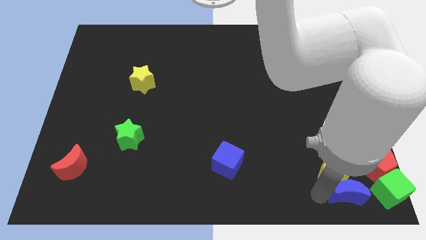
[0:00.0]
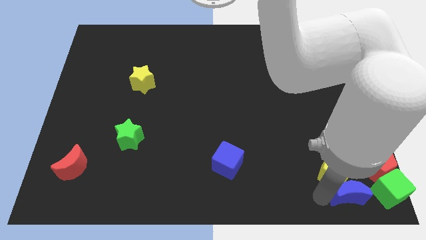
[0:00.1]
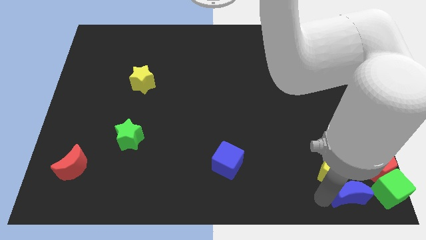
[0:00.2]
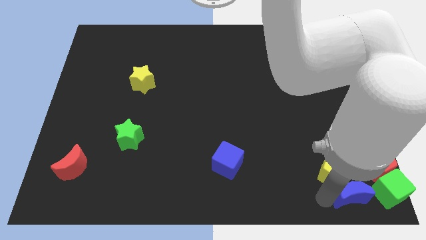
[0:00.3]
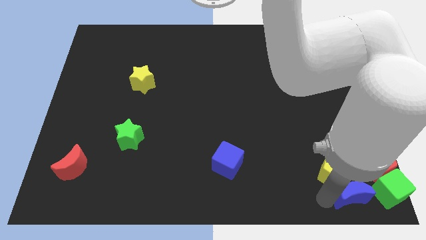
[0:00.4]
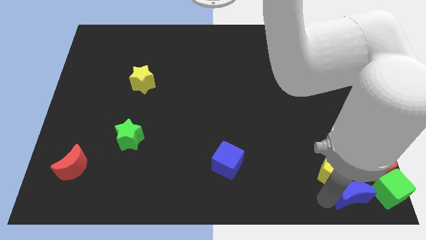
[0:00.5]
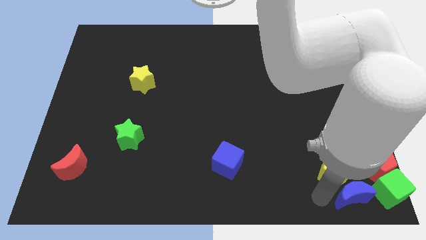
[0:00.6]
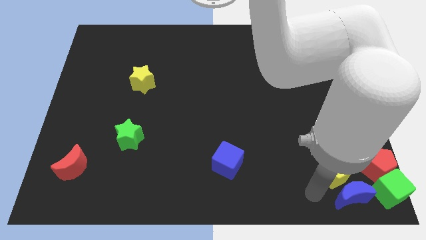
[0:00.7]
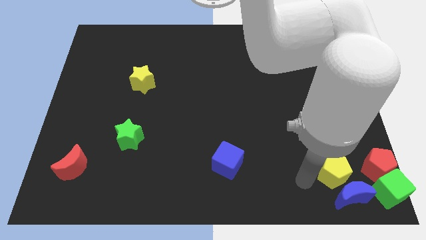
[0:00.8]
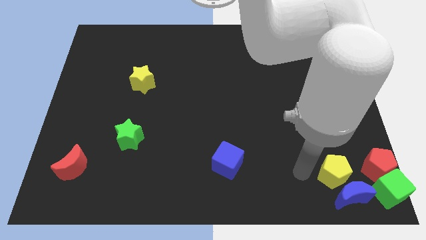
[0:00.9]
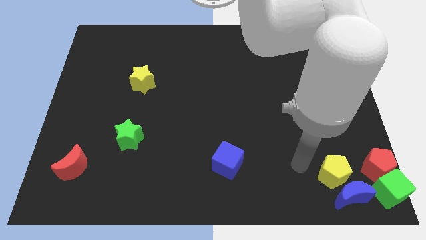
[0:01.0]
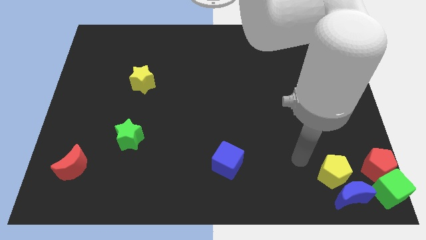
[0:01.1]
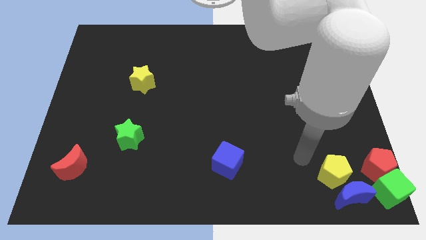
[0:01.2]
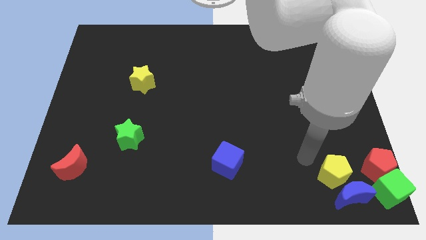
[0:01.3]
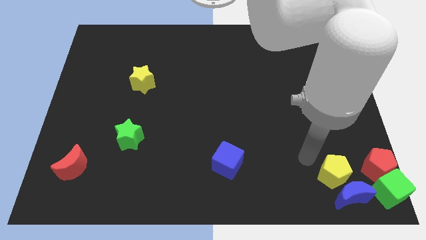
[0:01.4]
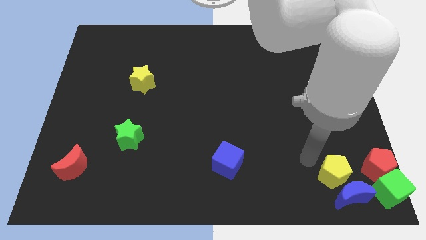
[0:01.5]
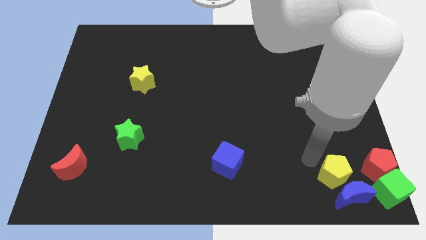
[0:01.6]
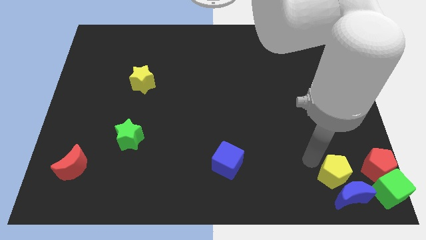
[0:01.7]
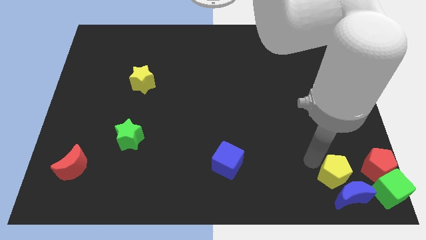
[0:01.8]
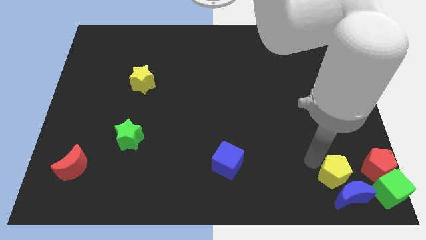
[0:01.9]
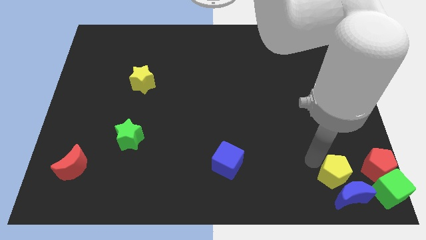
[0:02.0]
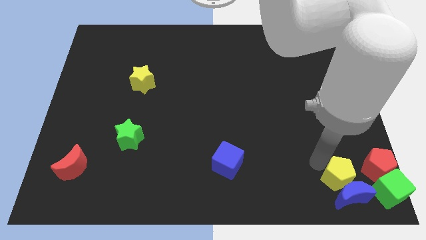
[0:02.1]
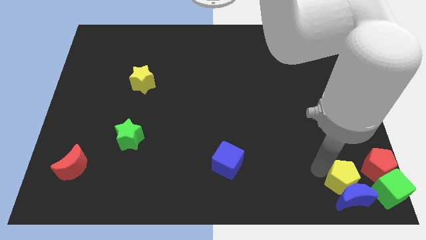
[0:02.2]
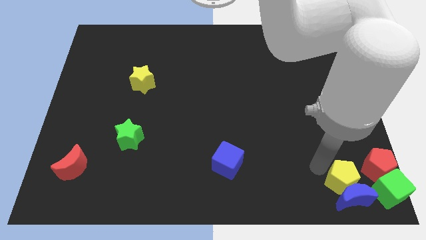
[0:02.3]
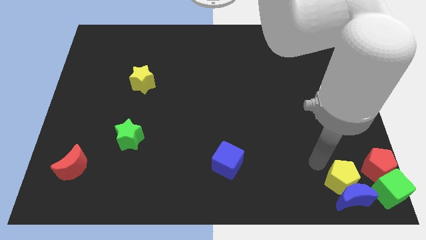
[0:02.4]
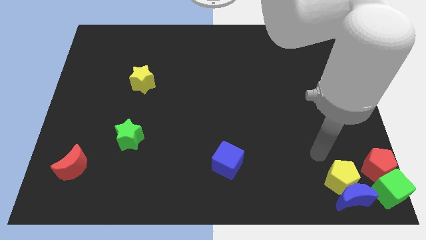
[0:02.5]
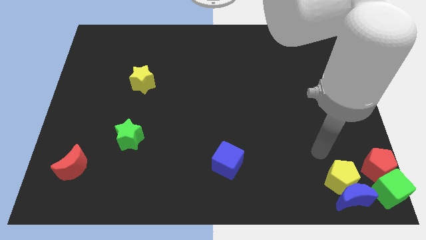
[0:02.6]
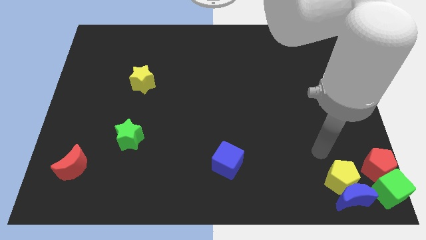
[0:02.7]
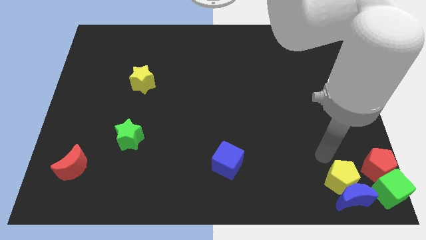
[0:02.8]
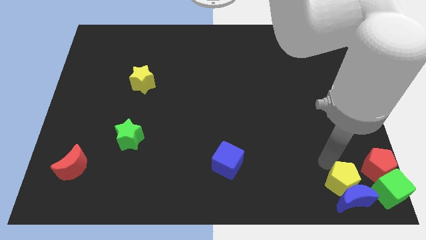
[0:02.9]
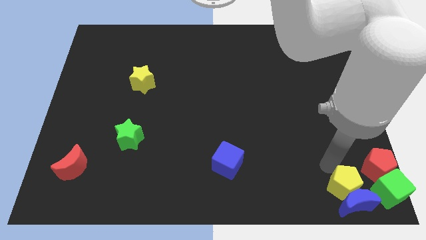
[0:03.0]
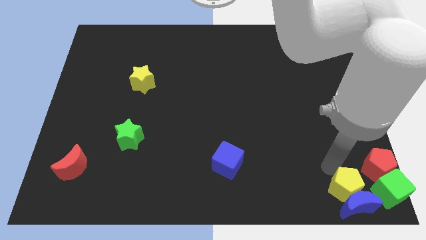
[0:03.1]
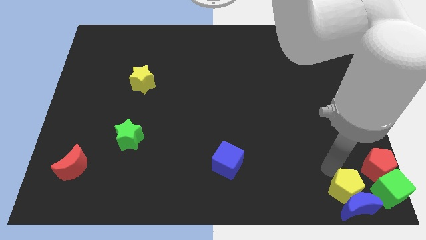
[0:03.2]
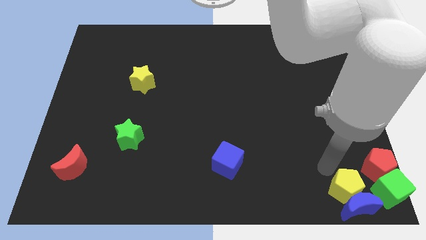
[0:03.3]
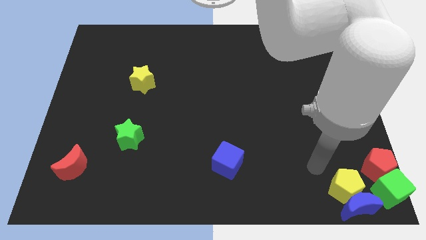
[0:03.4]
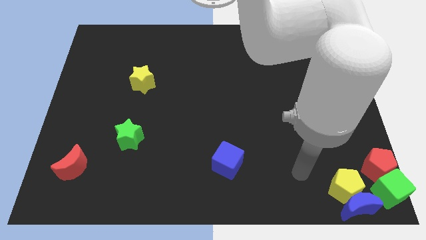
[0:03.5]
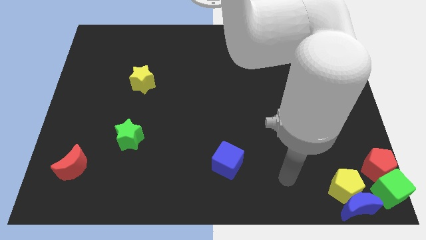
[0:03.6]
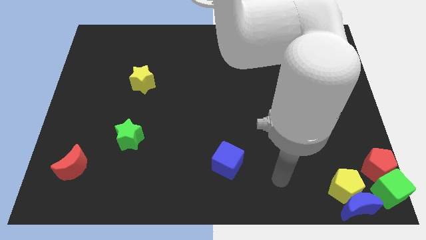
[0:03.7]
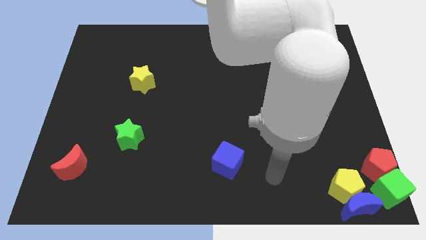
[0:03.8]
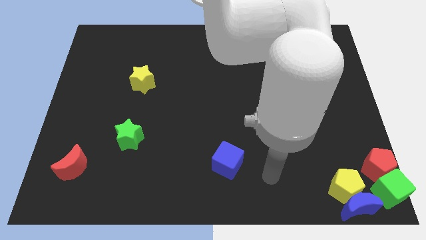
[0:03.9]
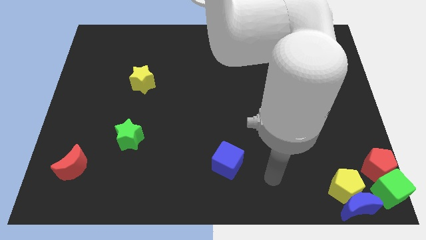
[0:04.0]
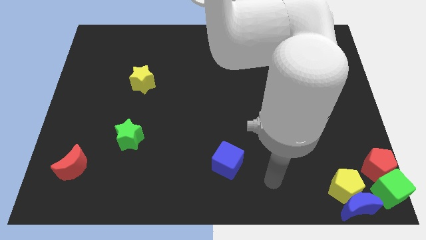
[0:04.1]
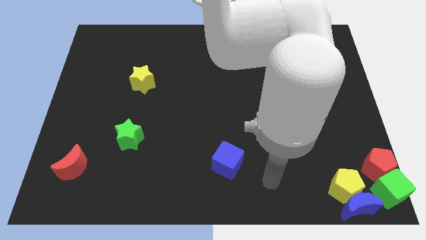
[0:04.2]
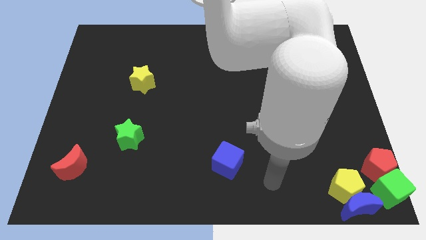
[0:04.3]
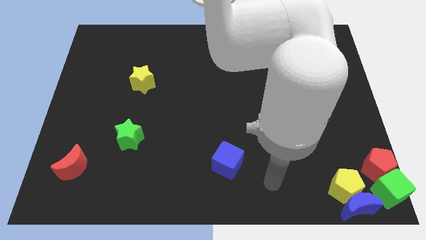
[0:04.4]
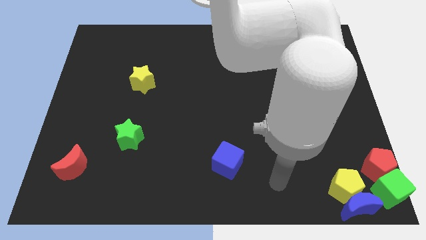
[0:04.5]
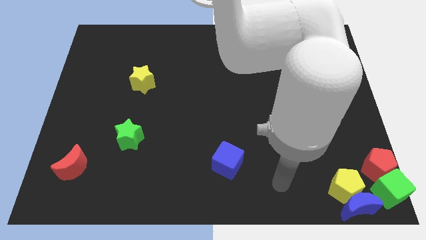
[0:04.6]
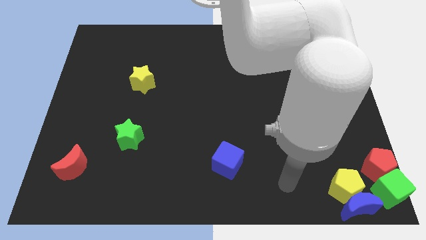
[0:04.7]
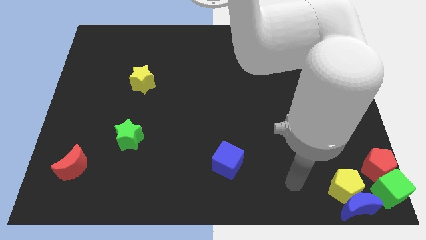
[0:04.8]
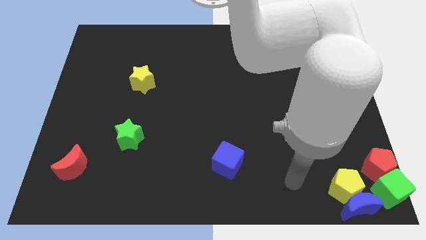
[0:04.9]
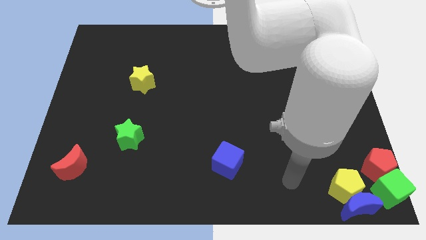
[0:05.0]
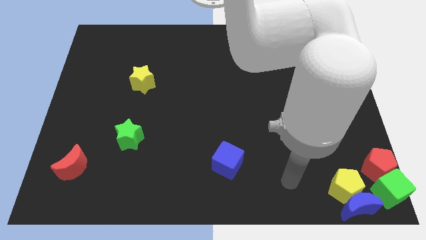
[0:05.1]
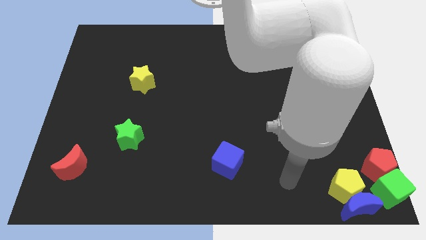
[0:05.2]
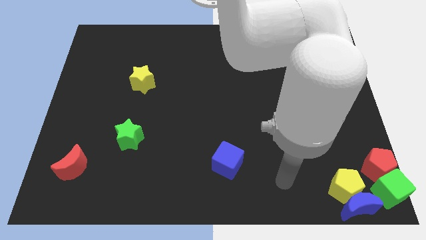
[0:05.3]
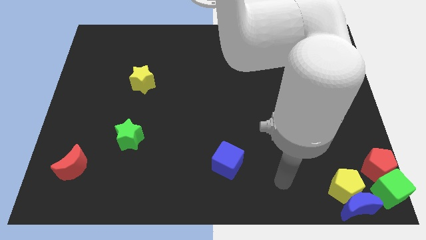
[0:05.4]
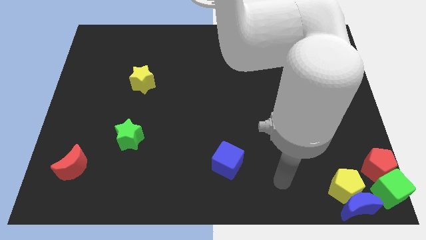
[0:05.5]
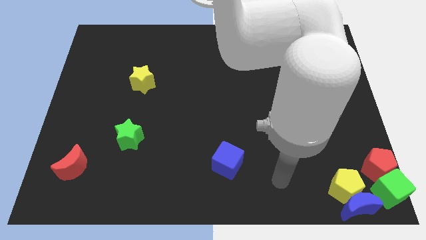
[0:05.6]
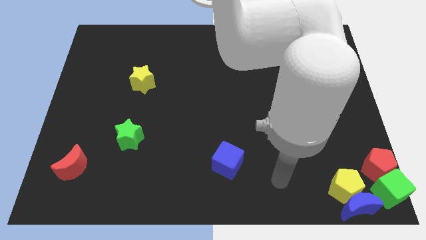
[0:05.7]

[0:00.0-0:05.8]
push the yellow pentagon into blue crescent

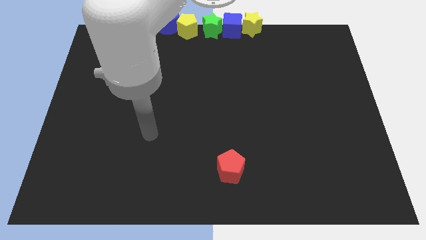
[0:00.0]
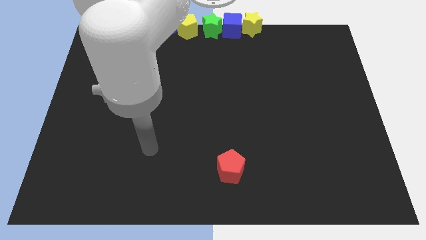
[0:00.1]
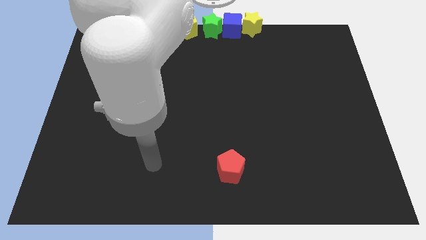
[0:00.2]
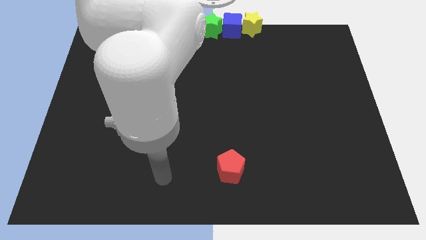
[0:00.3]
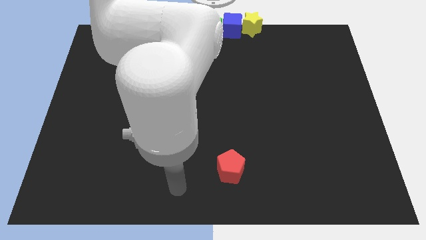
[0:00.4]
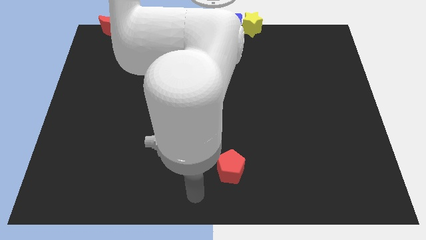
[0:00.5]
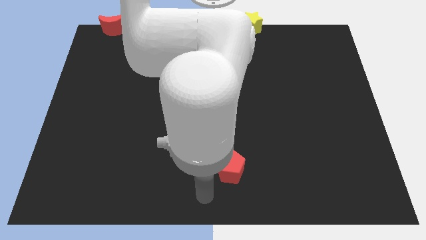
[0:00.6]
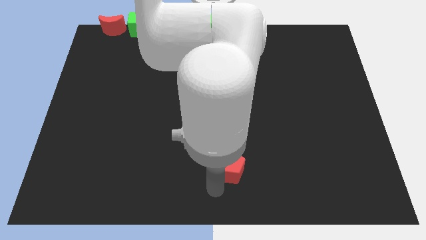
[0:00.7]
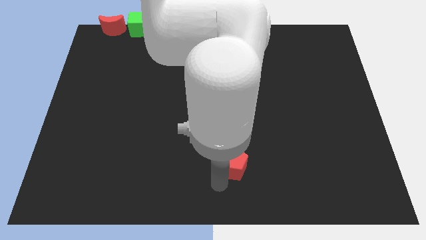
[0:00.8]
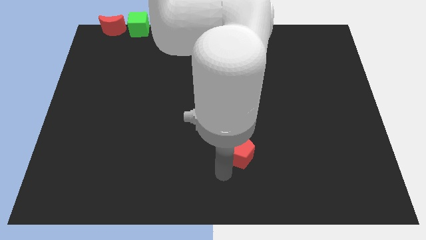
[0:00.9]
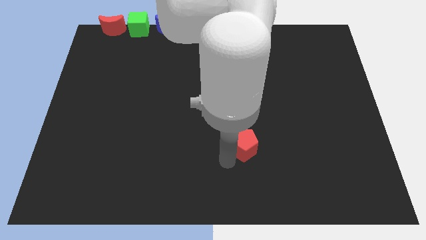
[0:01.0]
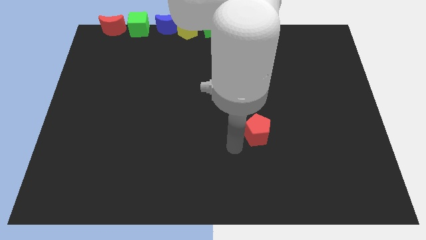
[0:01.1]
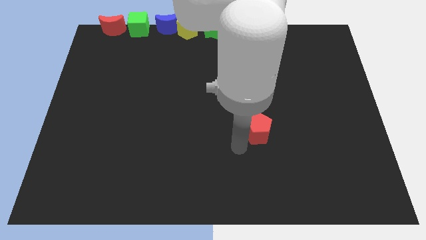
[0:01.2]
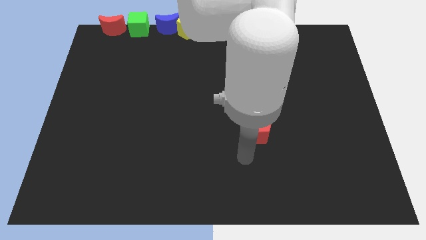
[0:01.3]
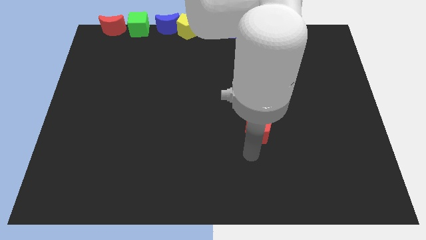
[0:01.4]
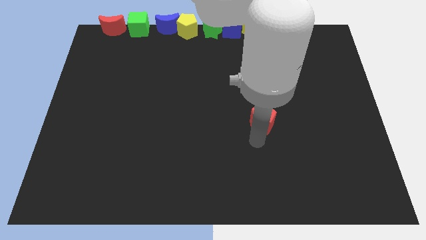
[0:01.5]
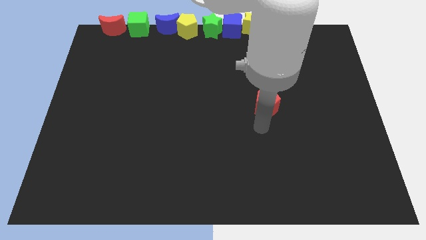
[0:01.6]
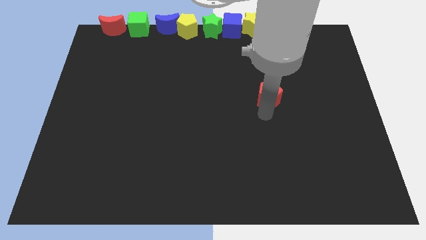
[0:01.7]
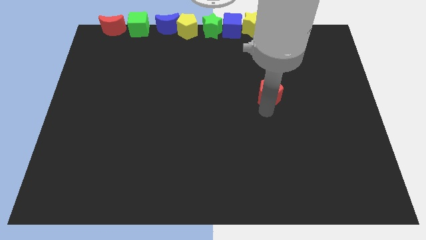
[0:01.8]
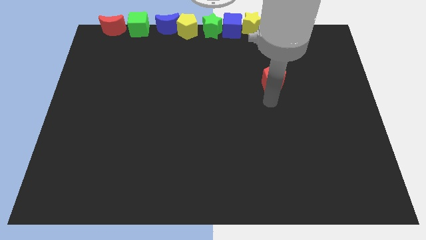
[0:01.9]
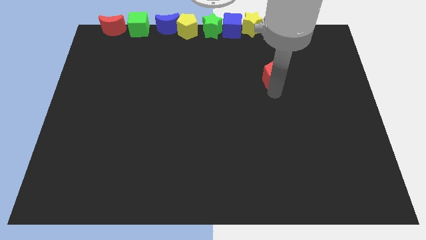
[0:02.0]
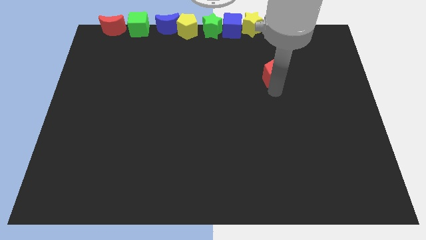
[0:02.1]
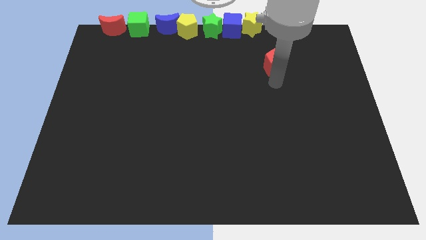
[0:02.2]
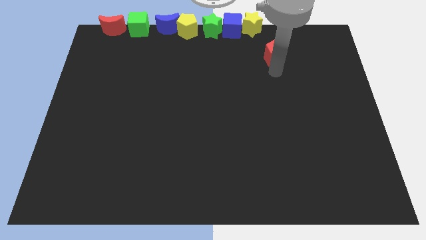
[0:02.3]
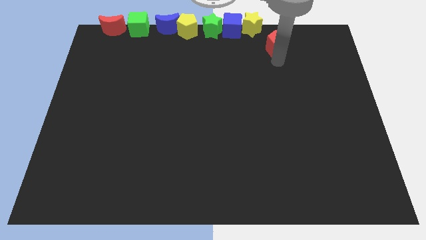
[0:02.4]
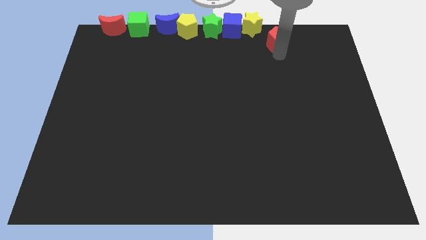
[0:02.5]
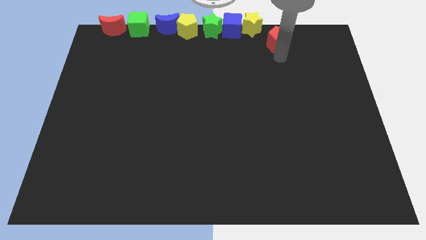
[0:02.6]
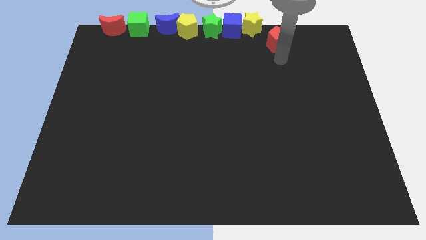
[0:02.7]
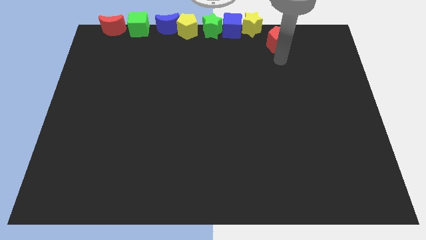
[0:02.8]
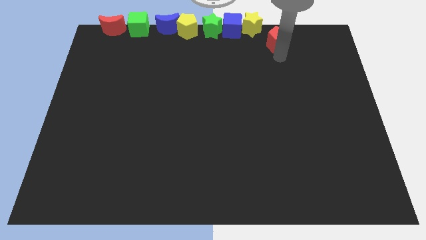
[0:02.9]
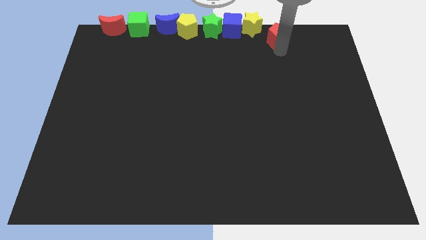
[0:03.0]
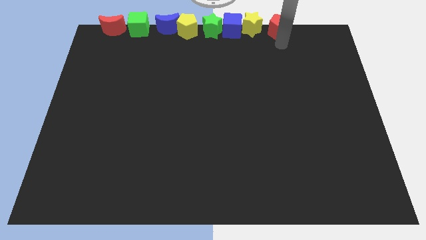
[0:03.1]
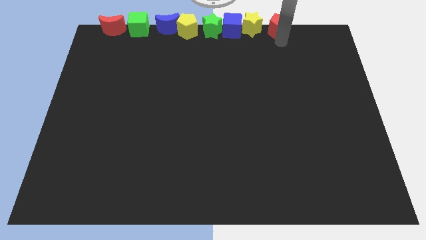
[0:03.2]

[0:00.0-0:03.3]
put the red pentagon in line with the other blocks
